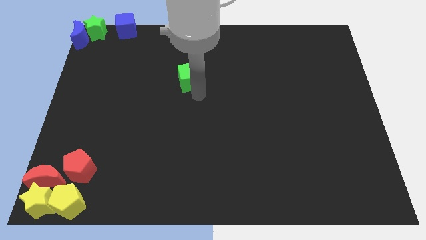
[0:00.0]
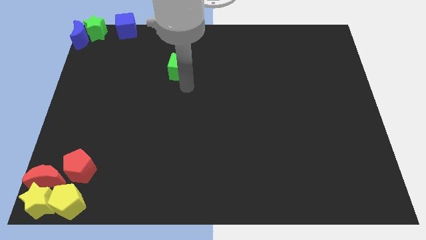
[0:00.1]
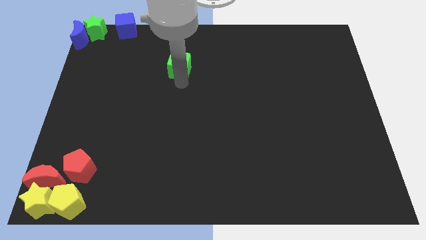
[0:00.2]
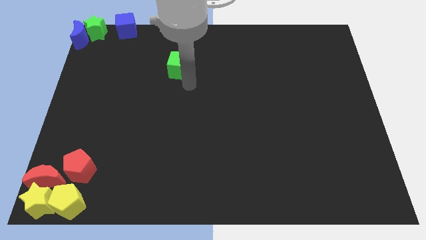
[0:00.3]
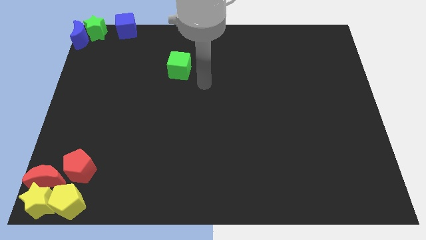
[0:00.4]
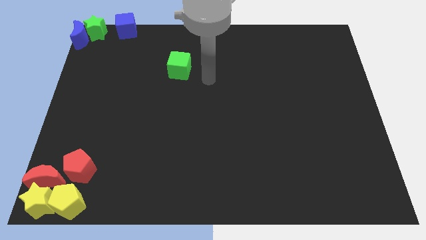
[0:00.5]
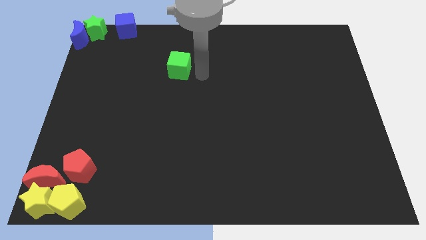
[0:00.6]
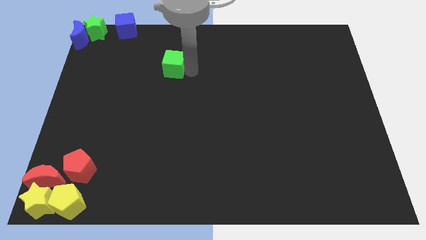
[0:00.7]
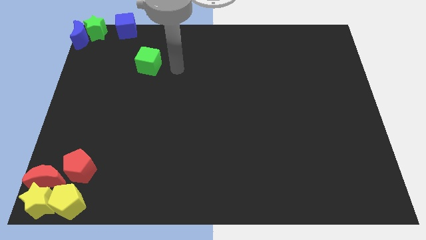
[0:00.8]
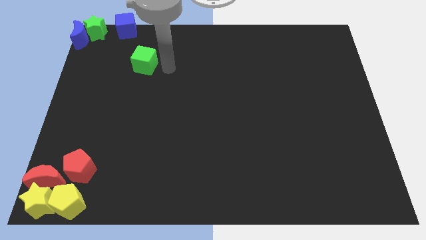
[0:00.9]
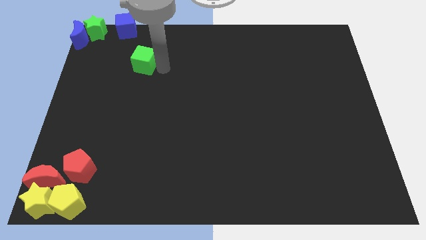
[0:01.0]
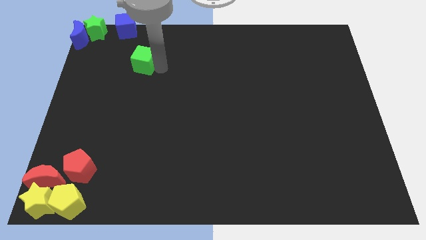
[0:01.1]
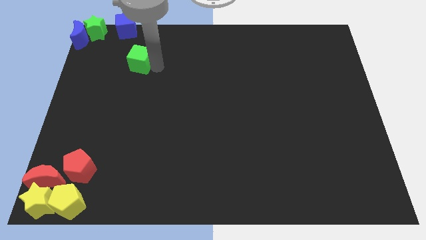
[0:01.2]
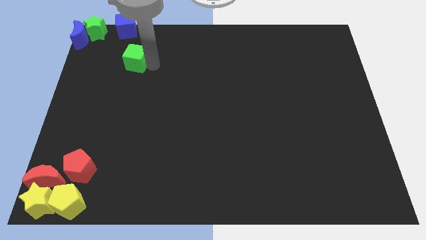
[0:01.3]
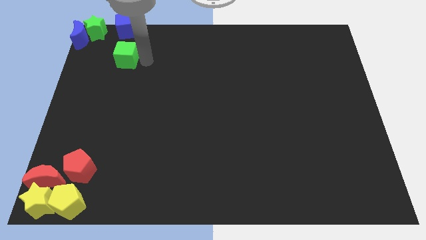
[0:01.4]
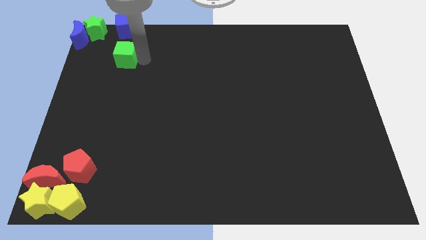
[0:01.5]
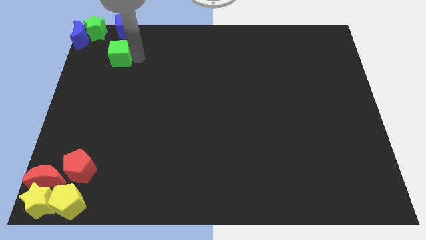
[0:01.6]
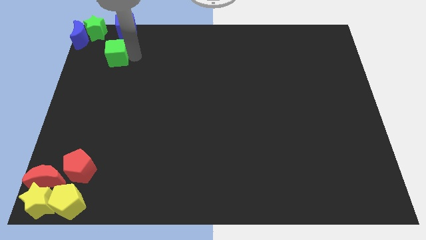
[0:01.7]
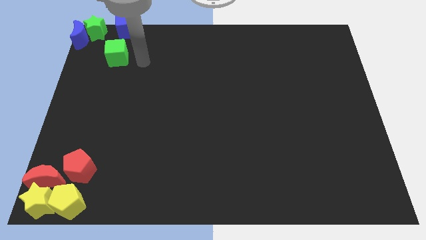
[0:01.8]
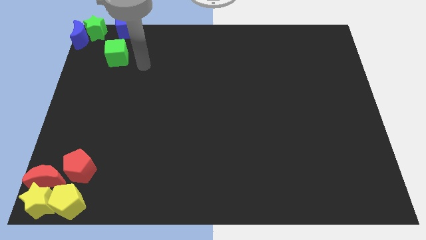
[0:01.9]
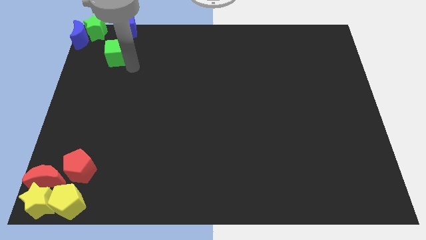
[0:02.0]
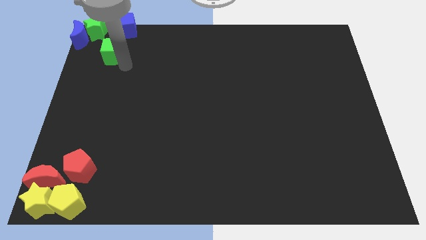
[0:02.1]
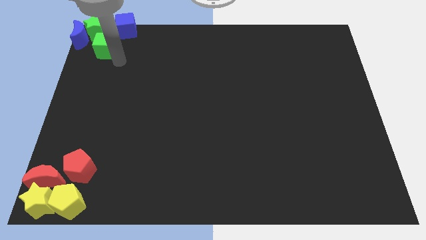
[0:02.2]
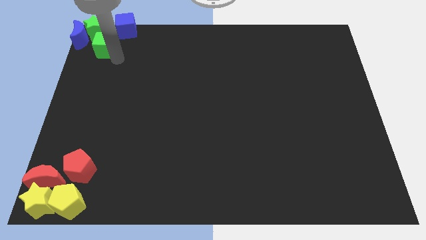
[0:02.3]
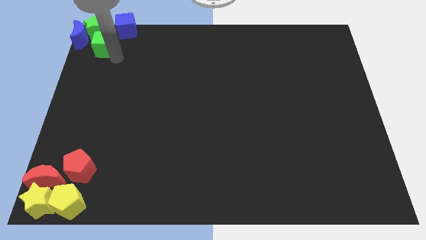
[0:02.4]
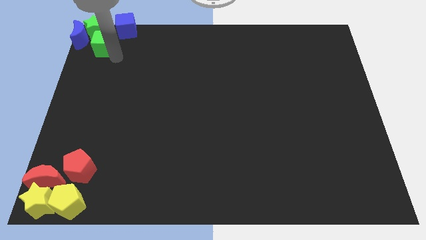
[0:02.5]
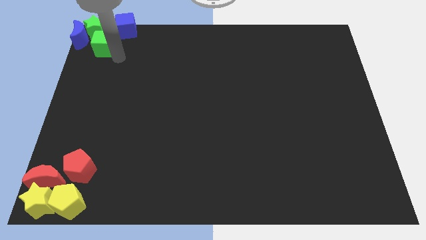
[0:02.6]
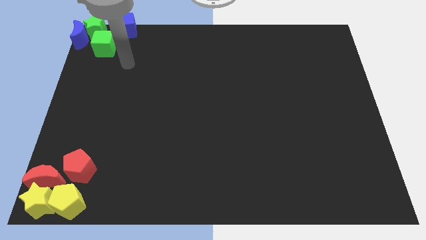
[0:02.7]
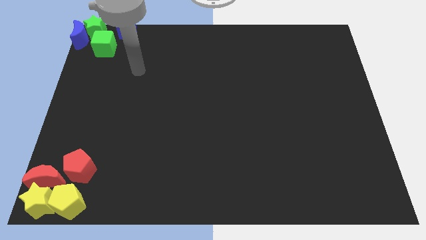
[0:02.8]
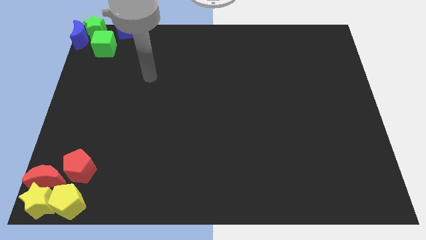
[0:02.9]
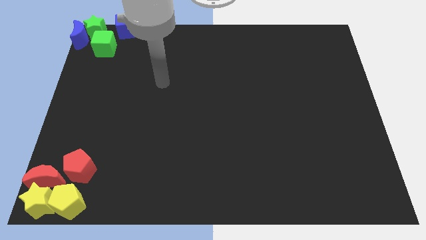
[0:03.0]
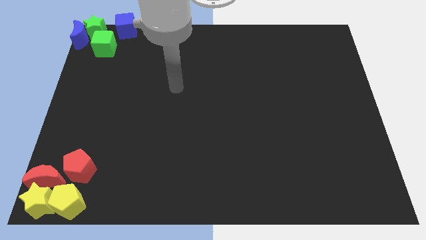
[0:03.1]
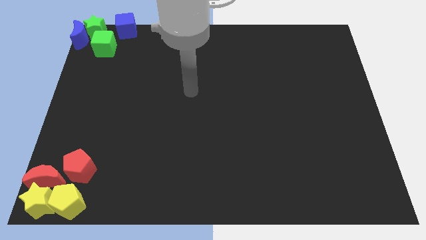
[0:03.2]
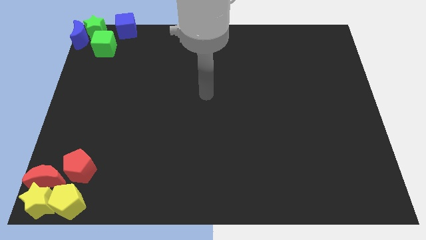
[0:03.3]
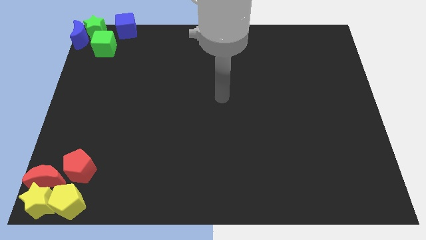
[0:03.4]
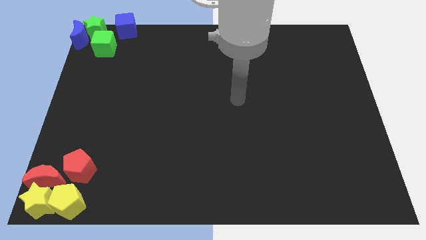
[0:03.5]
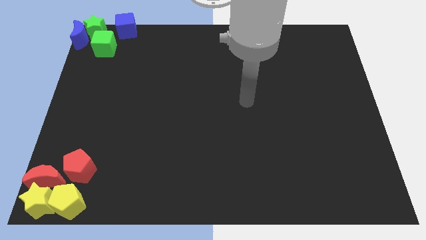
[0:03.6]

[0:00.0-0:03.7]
move the green cube down to the green star

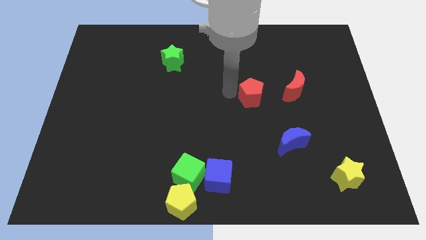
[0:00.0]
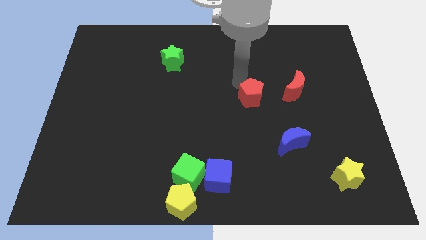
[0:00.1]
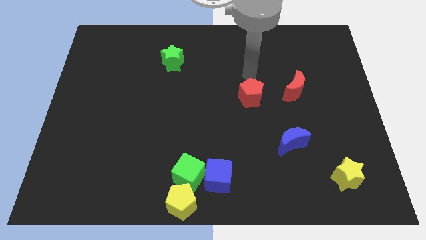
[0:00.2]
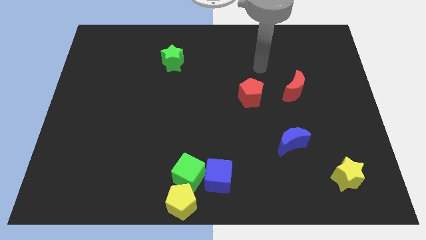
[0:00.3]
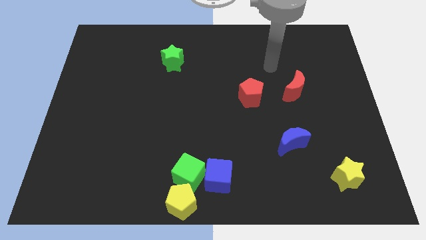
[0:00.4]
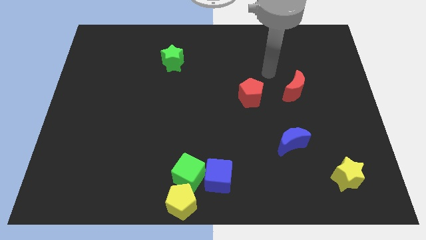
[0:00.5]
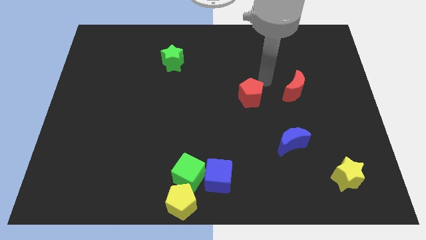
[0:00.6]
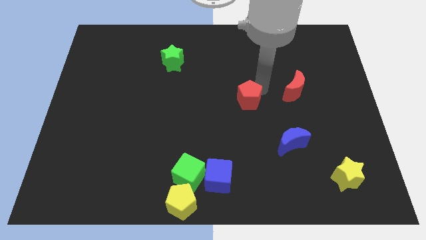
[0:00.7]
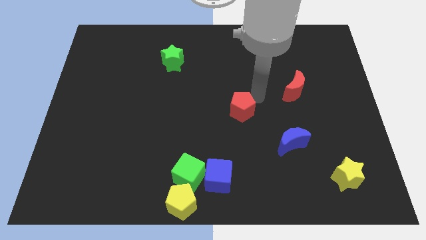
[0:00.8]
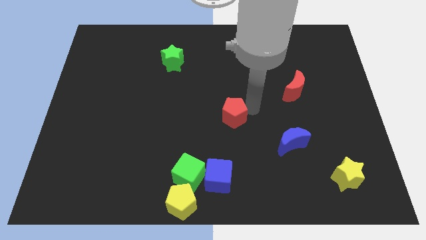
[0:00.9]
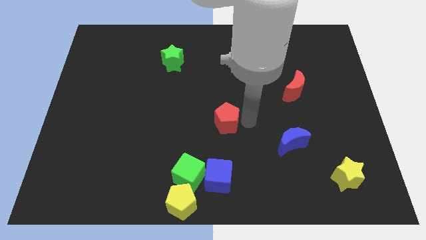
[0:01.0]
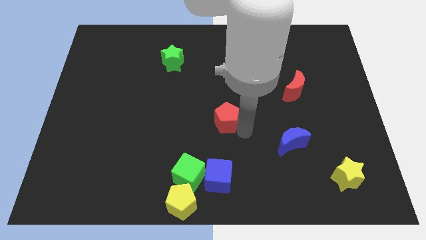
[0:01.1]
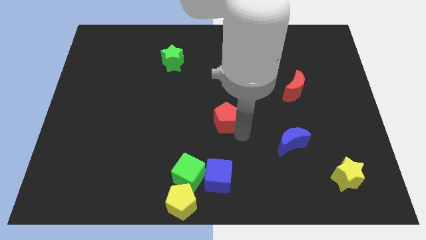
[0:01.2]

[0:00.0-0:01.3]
push red pentagon above blue cube

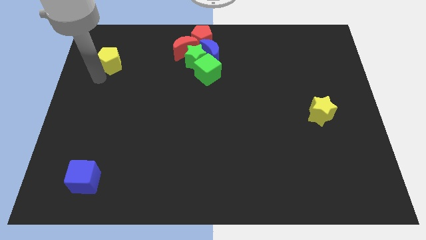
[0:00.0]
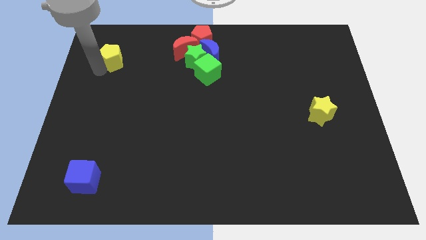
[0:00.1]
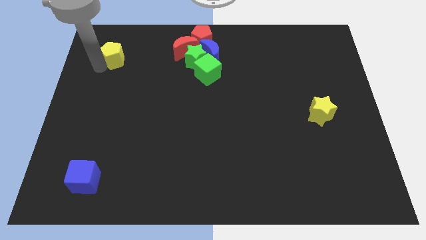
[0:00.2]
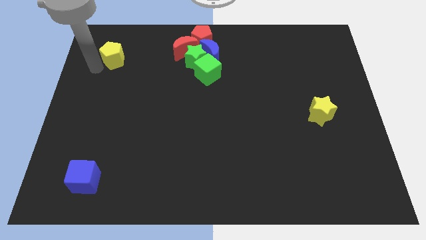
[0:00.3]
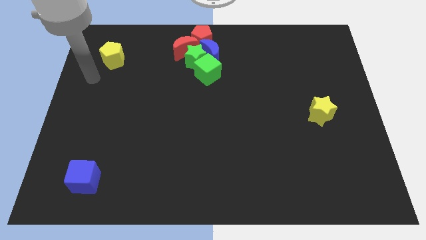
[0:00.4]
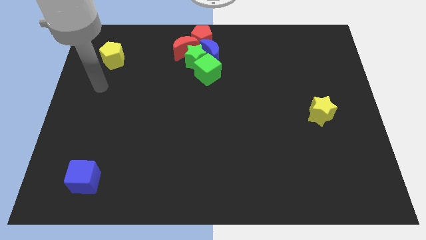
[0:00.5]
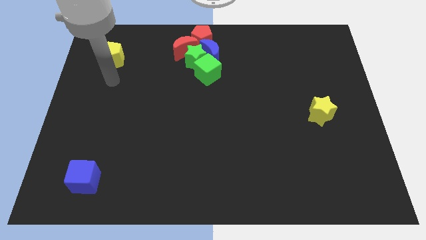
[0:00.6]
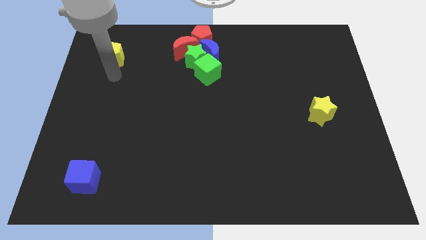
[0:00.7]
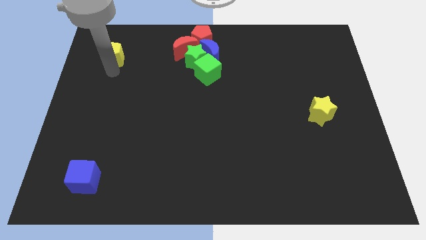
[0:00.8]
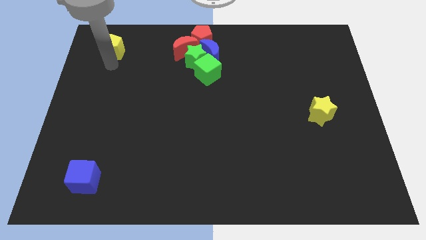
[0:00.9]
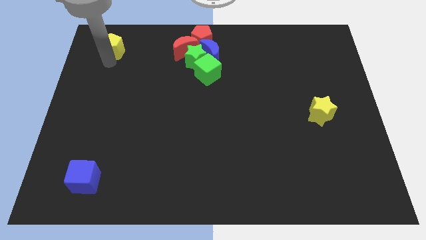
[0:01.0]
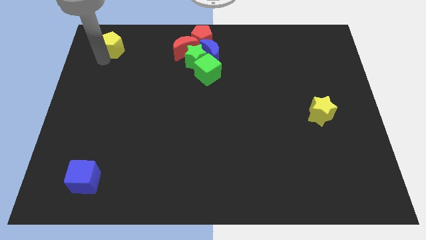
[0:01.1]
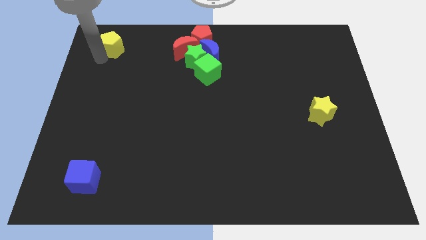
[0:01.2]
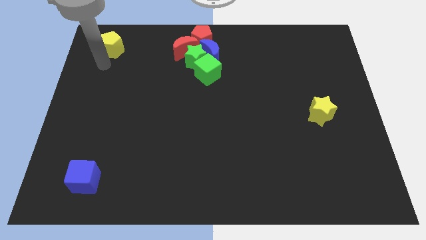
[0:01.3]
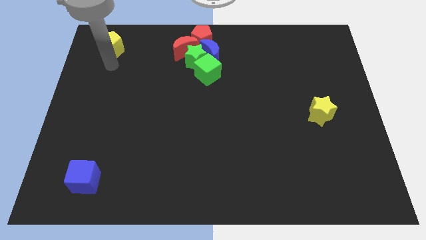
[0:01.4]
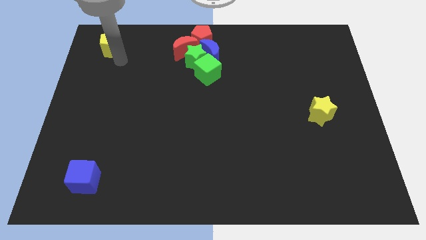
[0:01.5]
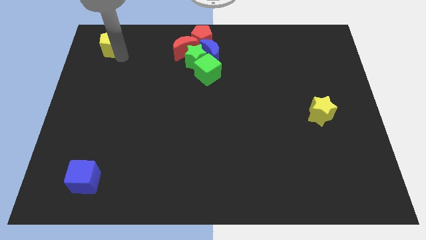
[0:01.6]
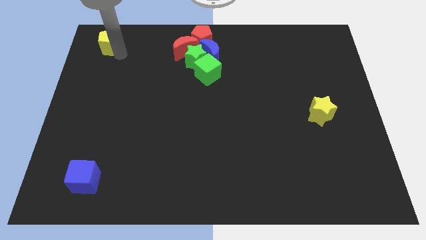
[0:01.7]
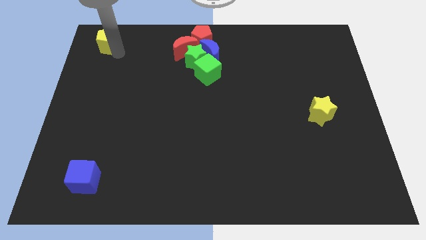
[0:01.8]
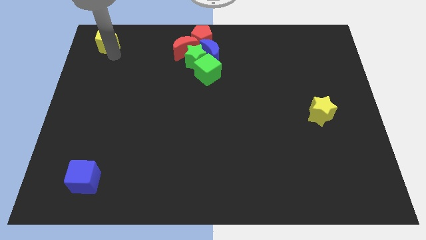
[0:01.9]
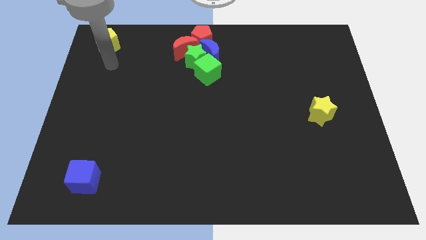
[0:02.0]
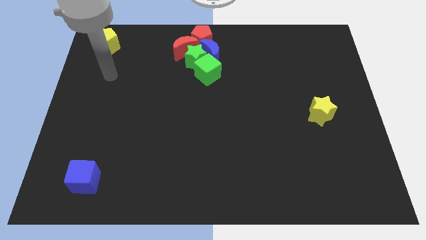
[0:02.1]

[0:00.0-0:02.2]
push the yellow pentagon to the top left of the board

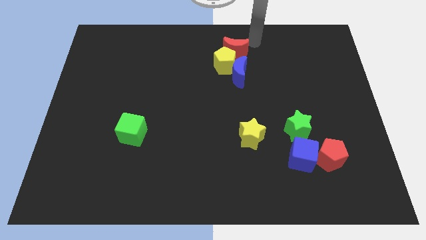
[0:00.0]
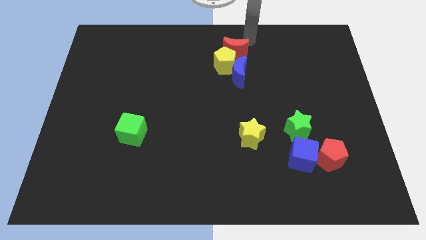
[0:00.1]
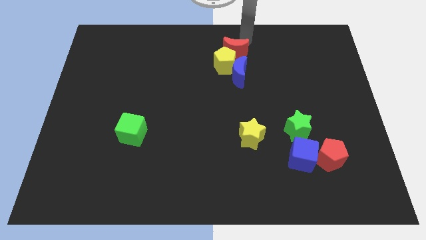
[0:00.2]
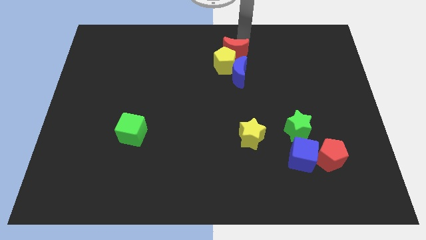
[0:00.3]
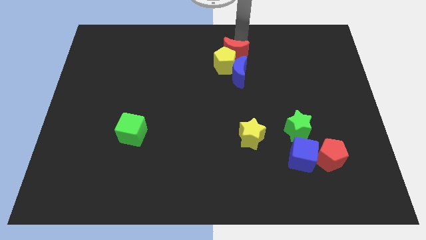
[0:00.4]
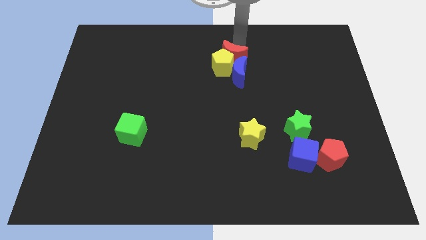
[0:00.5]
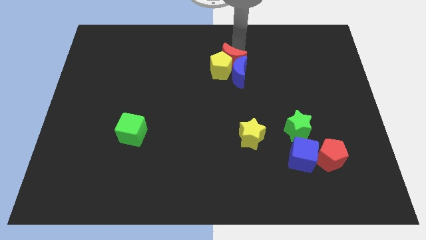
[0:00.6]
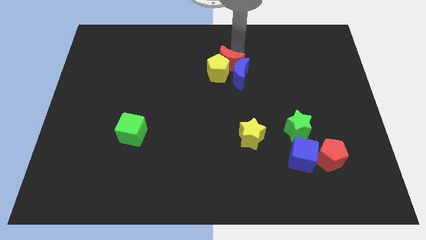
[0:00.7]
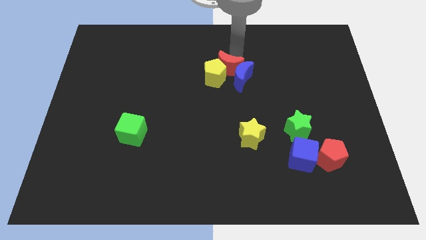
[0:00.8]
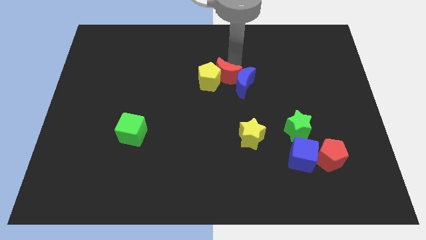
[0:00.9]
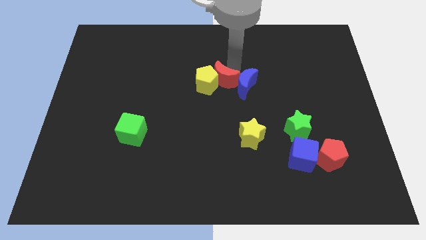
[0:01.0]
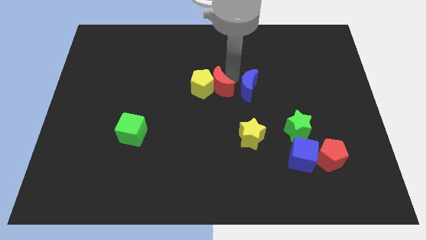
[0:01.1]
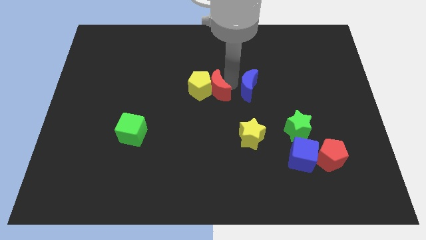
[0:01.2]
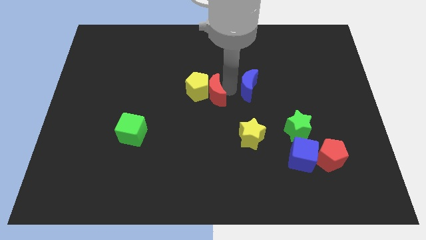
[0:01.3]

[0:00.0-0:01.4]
move the red crescent and yellow pentagon towards the center of the board

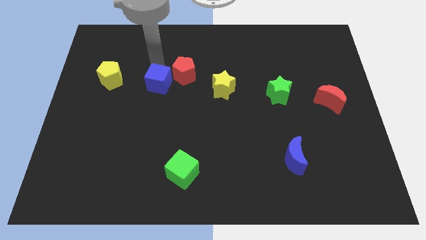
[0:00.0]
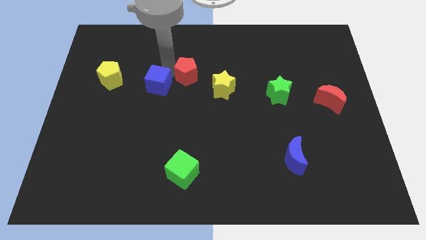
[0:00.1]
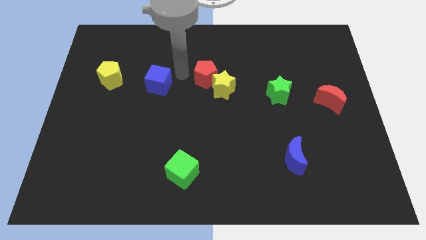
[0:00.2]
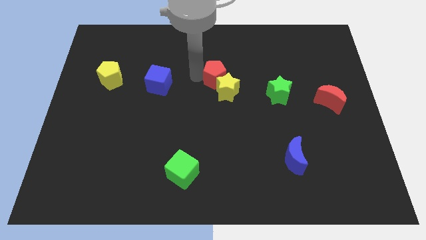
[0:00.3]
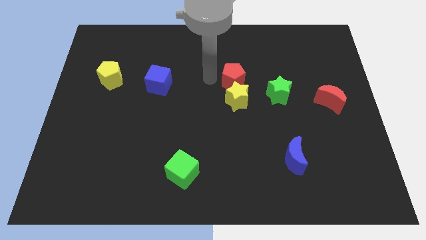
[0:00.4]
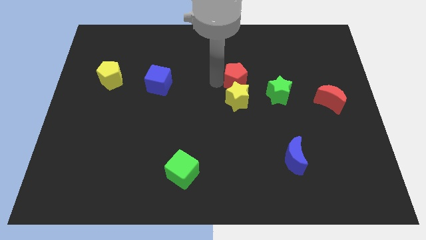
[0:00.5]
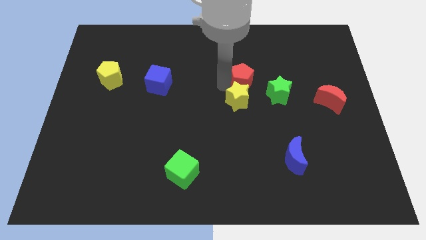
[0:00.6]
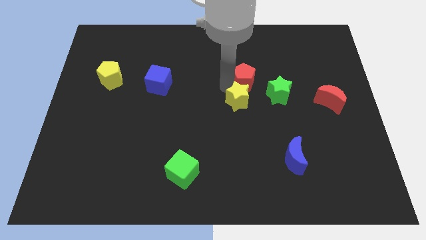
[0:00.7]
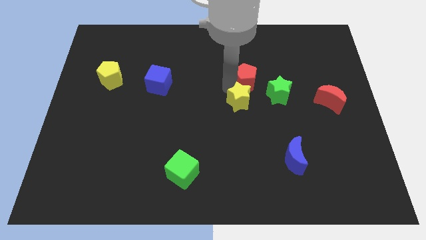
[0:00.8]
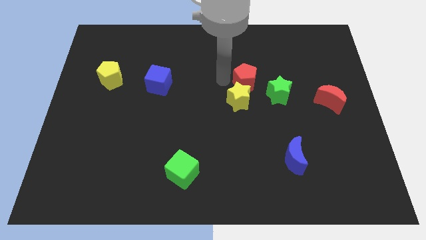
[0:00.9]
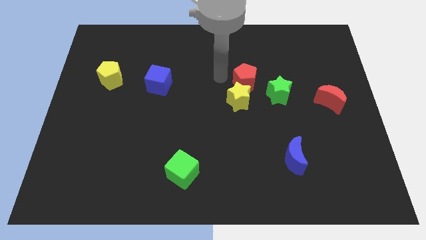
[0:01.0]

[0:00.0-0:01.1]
separate red pentagon diagonally right of the blue cube
